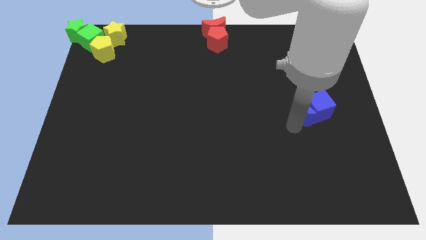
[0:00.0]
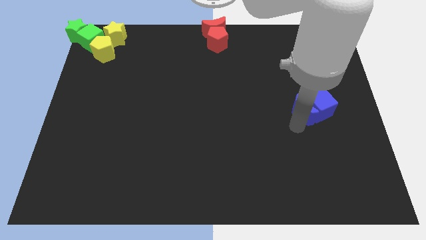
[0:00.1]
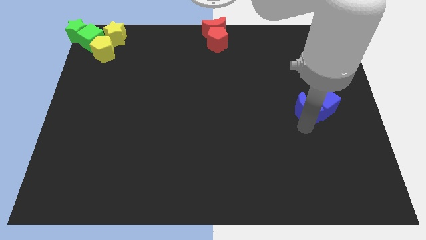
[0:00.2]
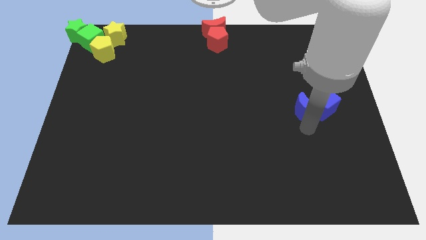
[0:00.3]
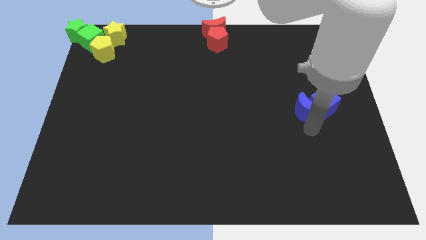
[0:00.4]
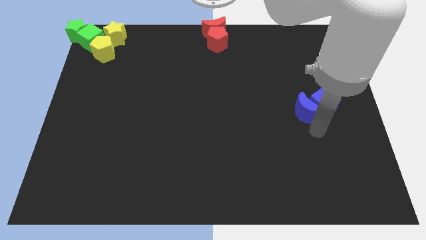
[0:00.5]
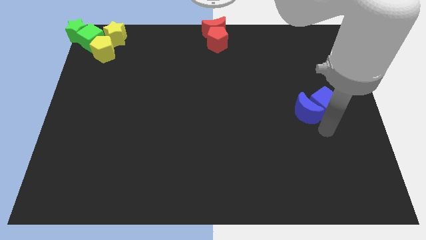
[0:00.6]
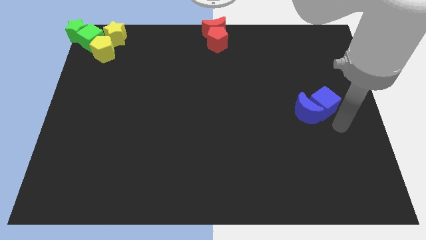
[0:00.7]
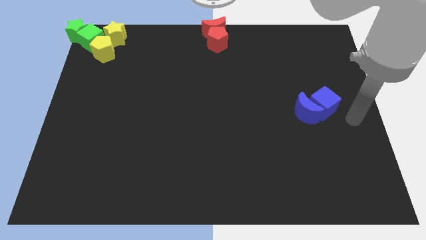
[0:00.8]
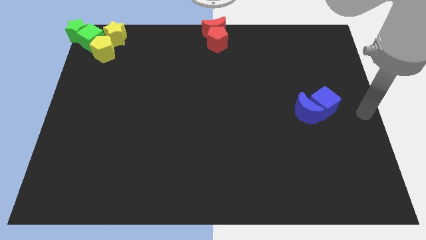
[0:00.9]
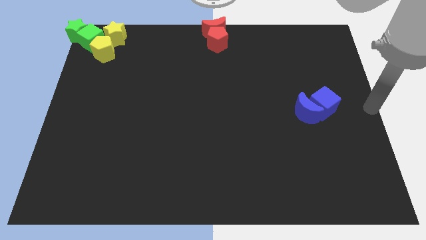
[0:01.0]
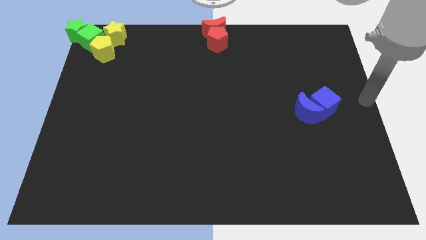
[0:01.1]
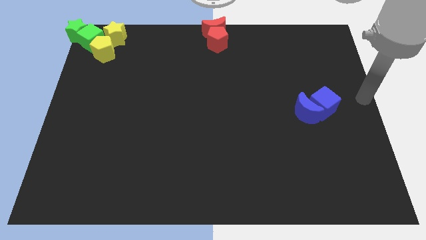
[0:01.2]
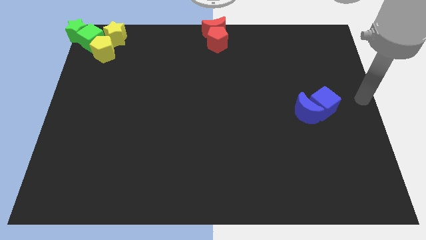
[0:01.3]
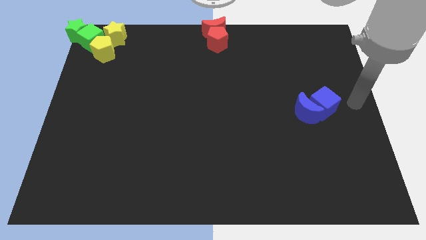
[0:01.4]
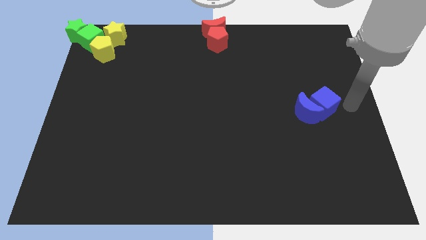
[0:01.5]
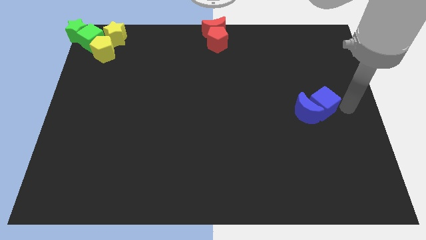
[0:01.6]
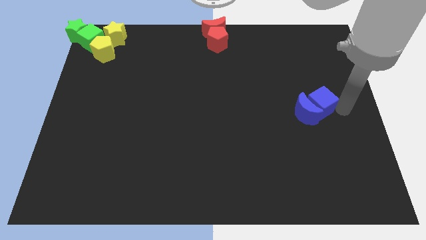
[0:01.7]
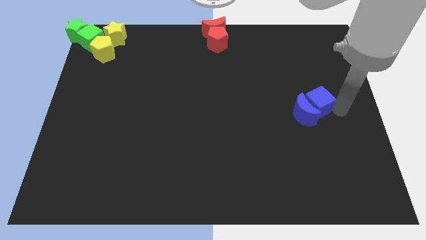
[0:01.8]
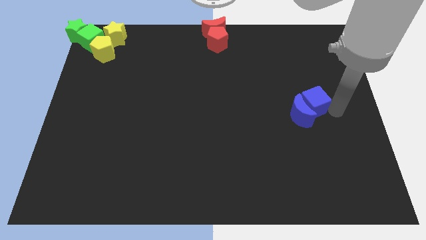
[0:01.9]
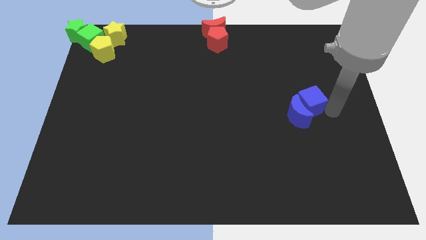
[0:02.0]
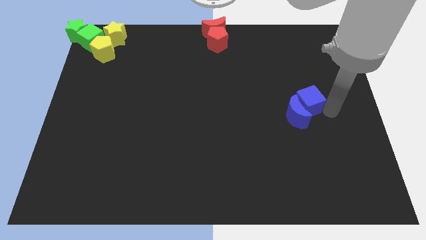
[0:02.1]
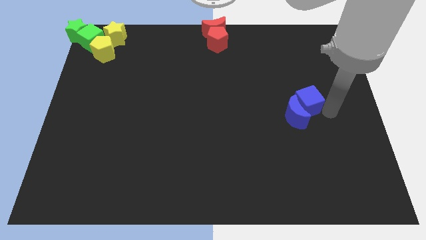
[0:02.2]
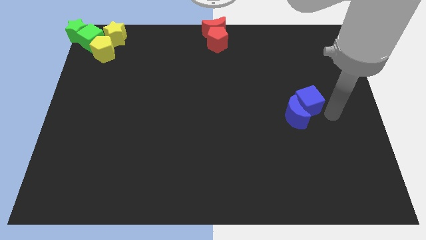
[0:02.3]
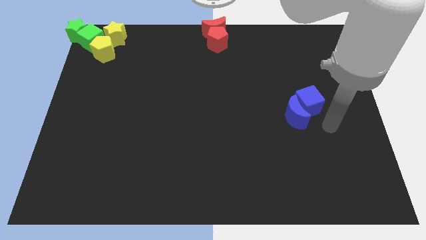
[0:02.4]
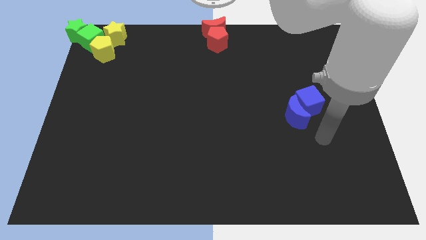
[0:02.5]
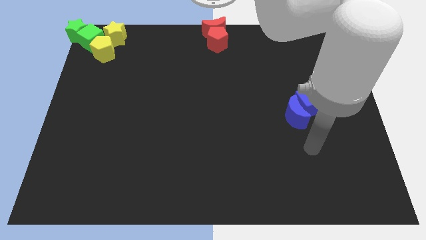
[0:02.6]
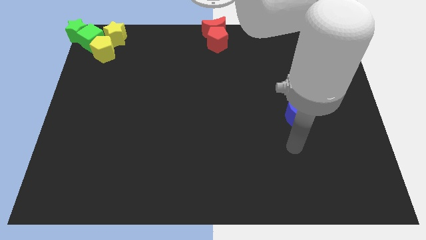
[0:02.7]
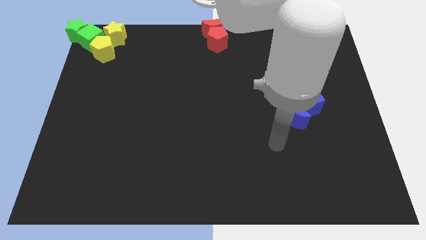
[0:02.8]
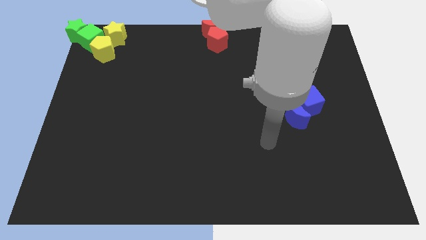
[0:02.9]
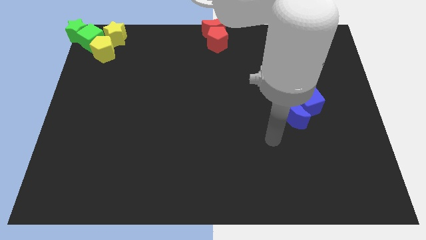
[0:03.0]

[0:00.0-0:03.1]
push the blue cube to the left slightly

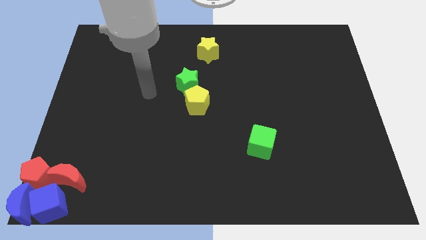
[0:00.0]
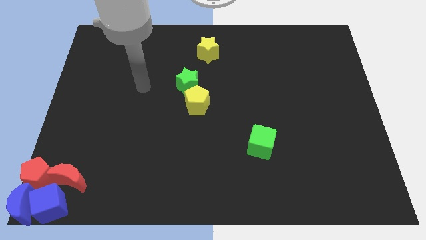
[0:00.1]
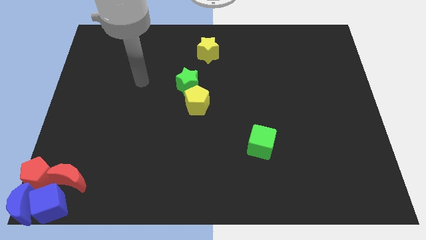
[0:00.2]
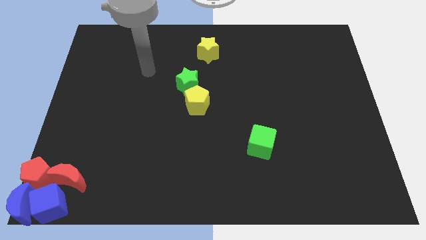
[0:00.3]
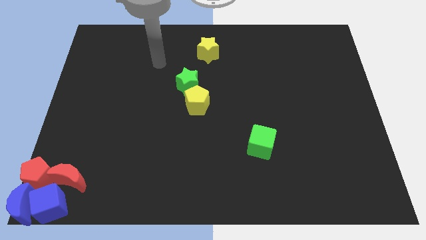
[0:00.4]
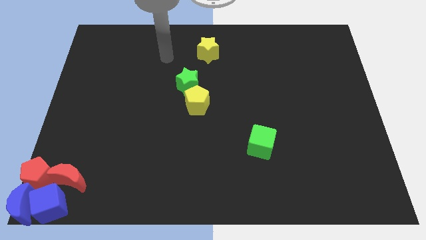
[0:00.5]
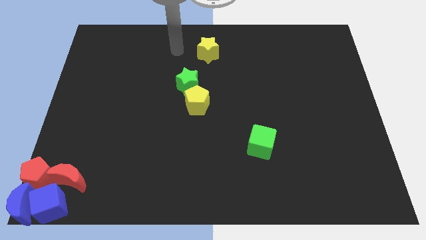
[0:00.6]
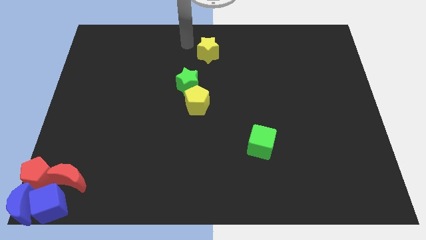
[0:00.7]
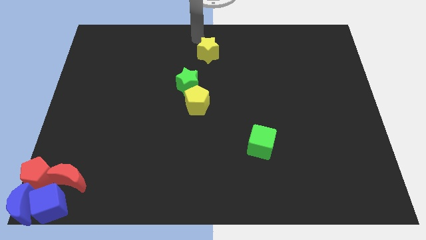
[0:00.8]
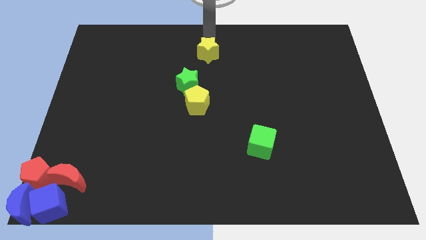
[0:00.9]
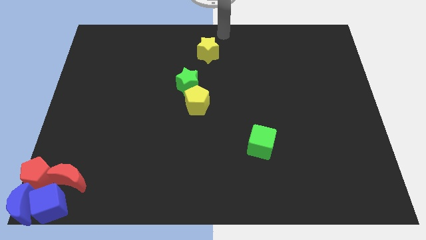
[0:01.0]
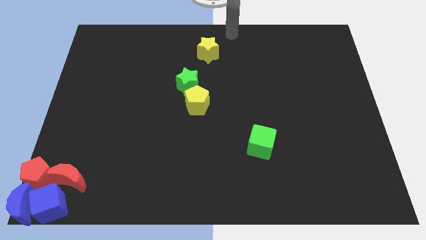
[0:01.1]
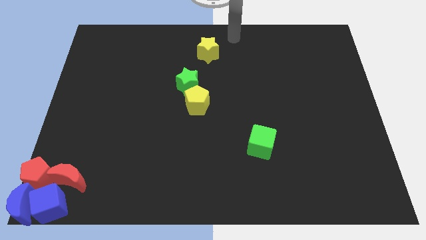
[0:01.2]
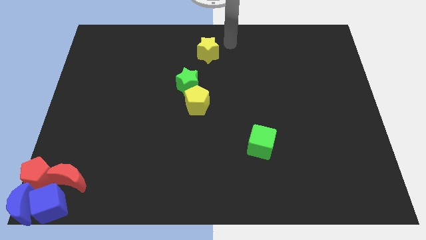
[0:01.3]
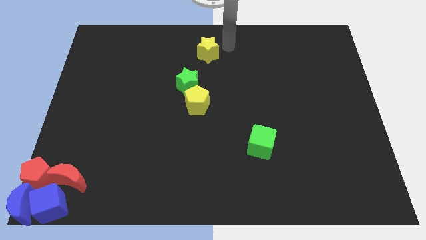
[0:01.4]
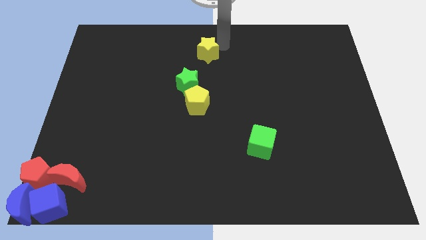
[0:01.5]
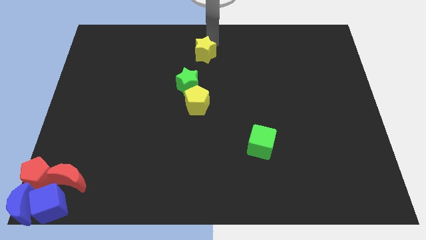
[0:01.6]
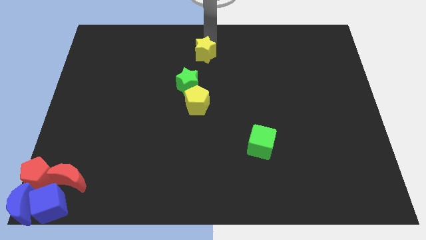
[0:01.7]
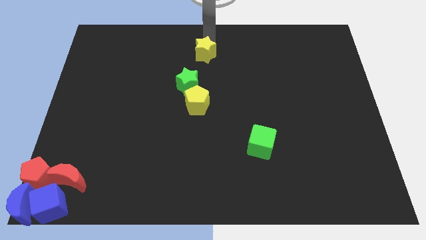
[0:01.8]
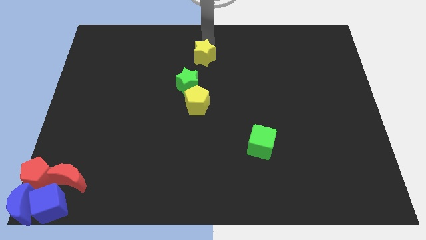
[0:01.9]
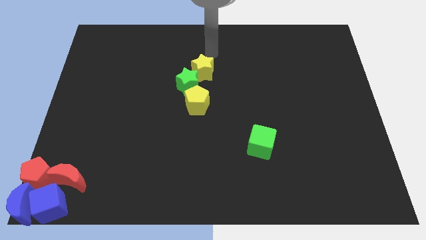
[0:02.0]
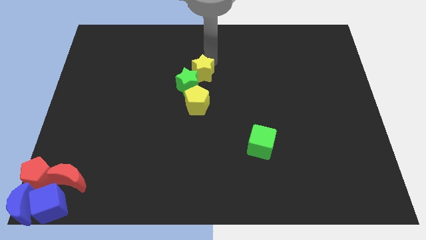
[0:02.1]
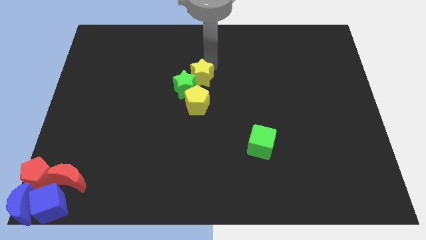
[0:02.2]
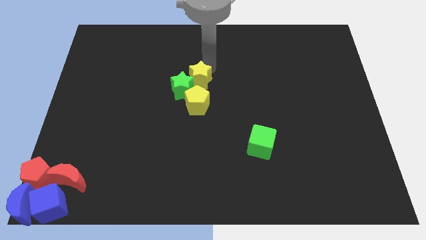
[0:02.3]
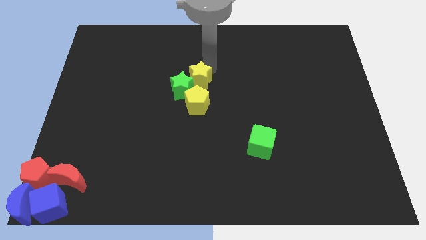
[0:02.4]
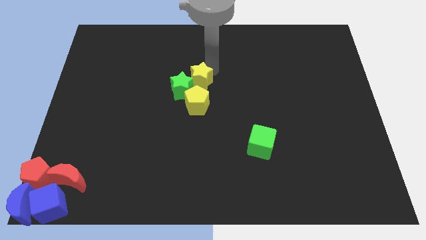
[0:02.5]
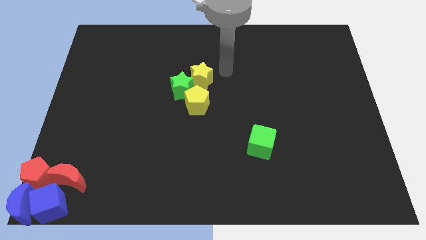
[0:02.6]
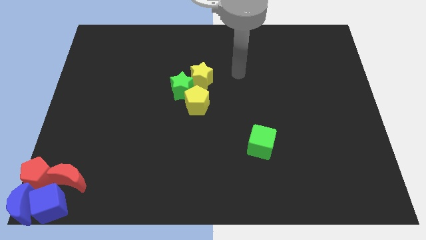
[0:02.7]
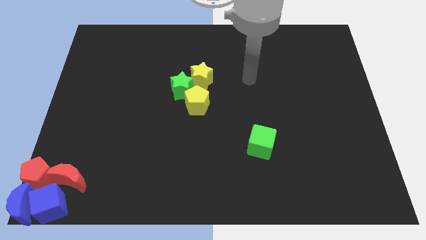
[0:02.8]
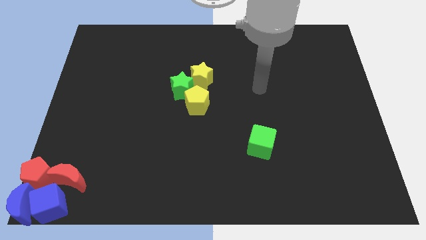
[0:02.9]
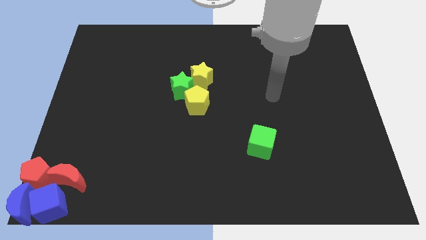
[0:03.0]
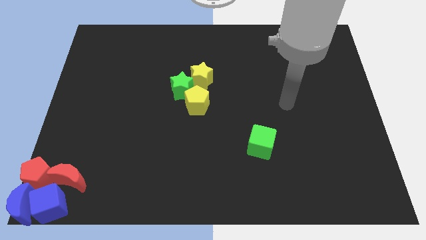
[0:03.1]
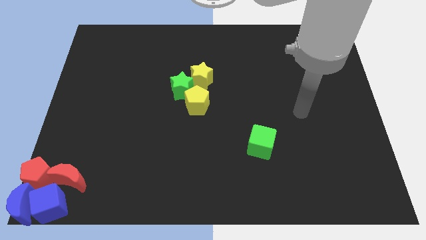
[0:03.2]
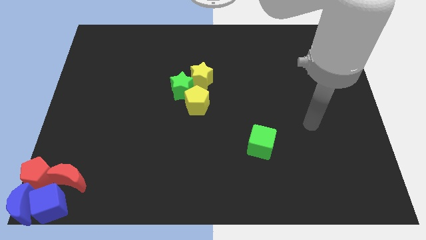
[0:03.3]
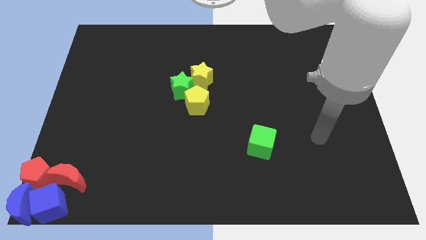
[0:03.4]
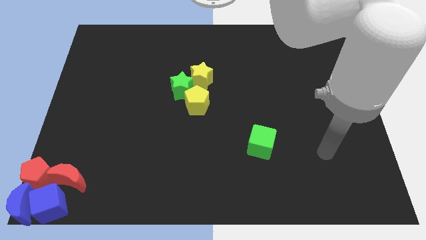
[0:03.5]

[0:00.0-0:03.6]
place the yellow star above the yellow pentagon

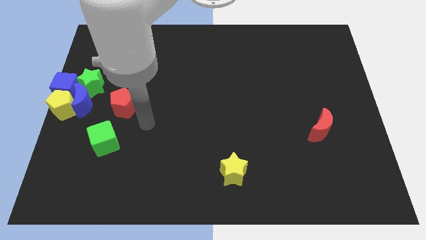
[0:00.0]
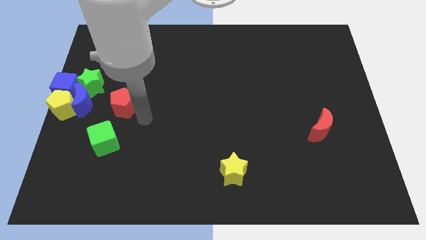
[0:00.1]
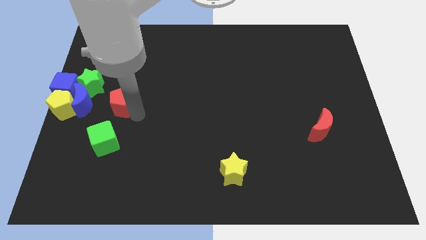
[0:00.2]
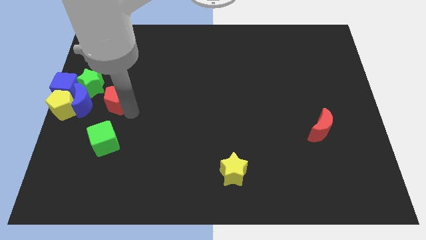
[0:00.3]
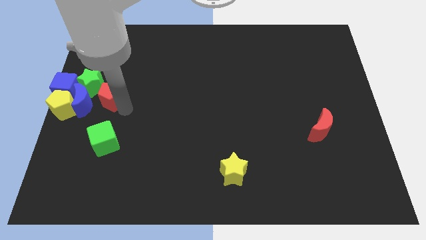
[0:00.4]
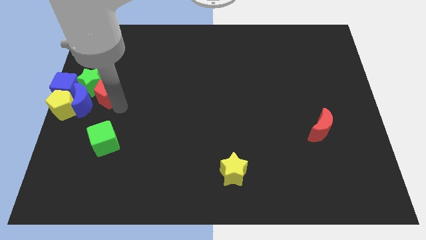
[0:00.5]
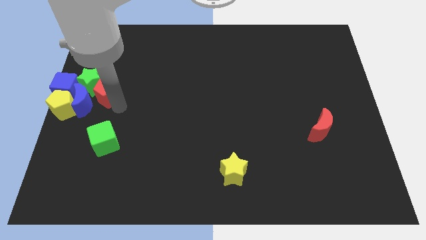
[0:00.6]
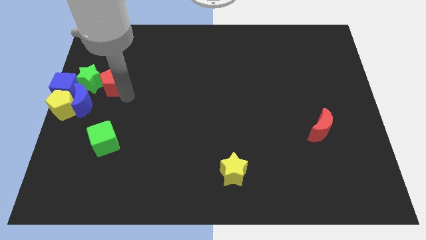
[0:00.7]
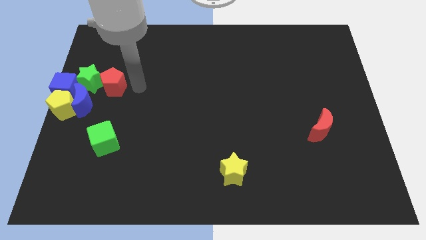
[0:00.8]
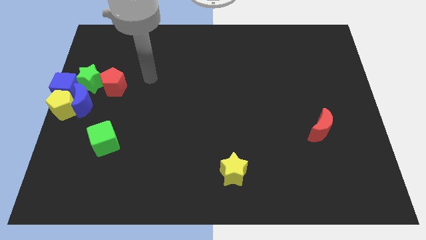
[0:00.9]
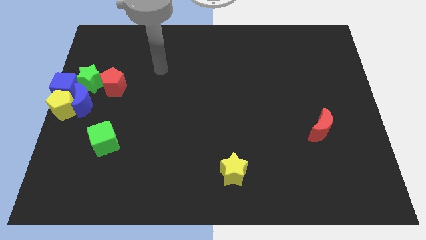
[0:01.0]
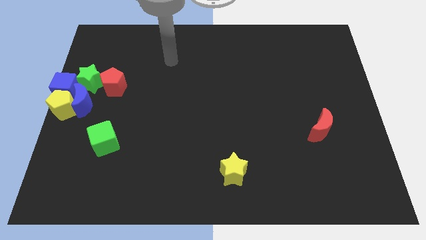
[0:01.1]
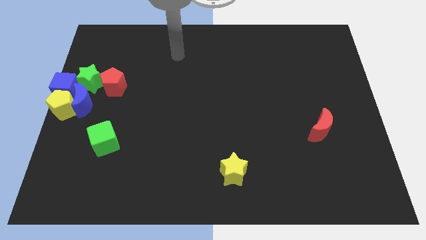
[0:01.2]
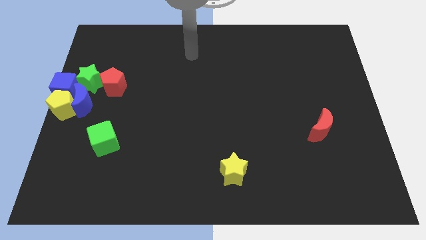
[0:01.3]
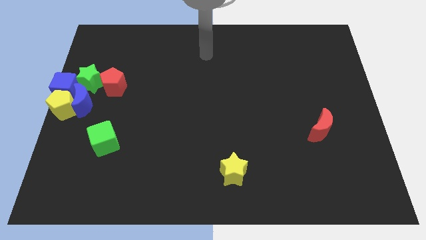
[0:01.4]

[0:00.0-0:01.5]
place the red pentagon to the right of green star

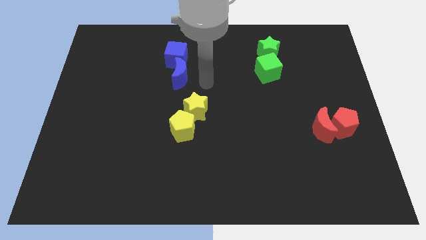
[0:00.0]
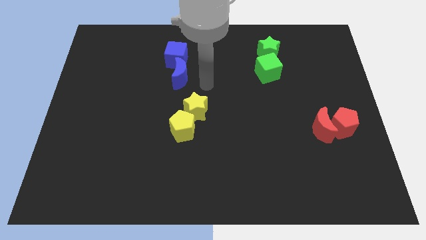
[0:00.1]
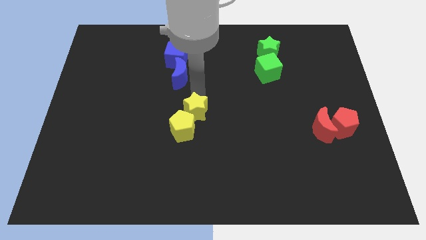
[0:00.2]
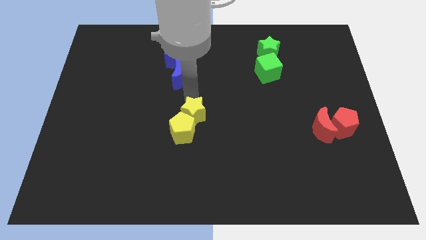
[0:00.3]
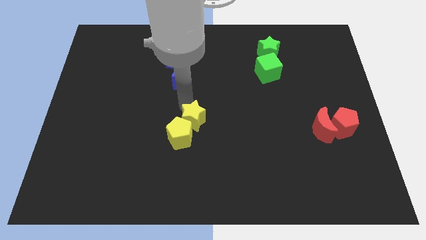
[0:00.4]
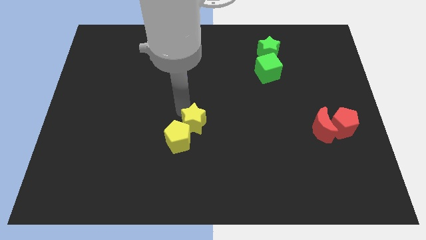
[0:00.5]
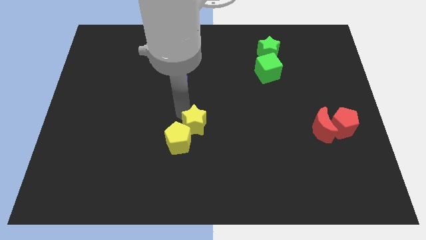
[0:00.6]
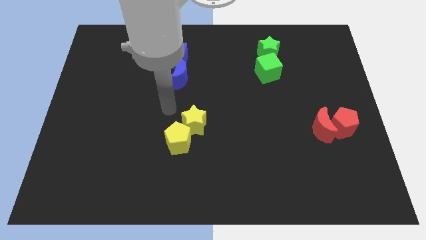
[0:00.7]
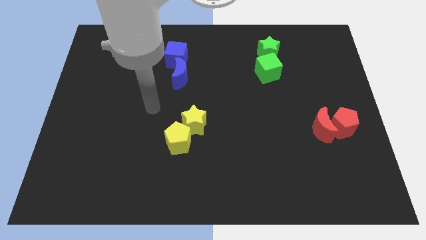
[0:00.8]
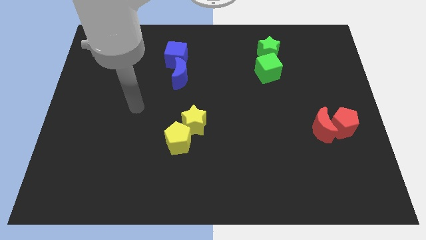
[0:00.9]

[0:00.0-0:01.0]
push yellow star towards yellow pentagon
